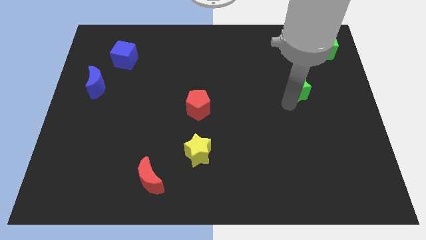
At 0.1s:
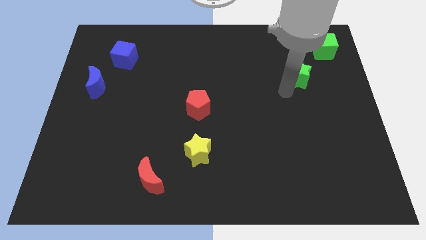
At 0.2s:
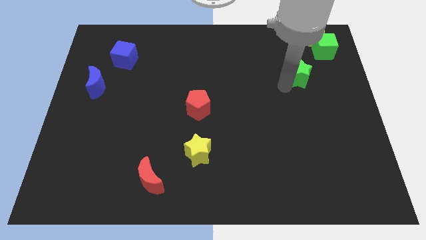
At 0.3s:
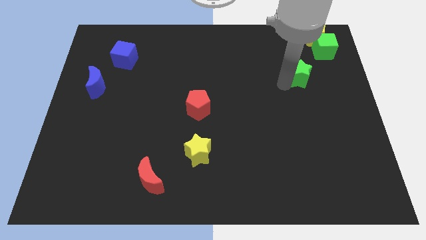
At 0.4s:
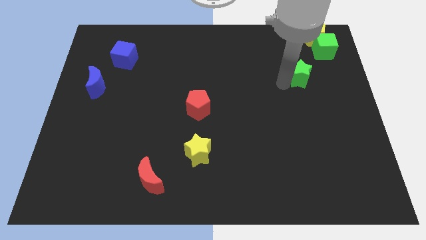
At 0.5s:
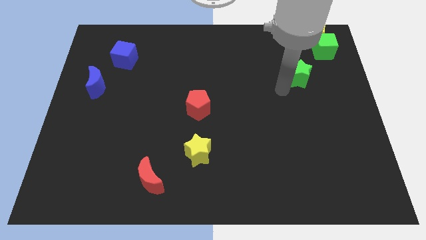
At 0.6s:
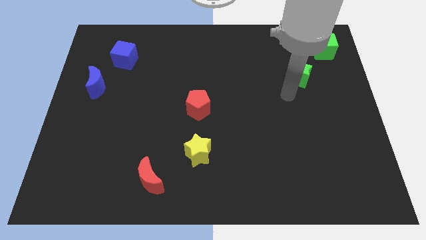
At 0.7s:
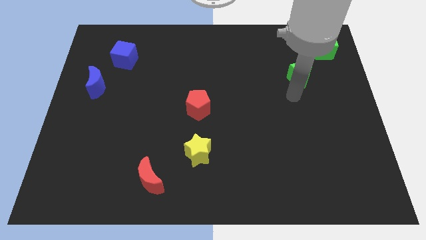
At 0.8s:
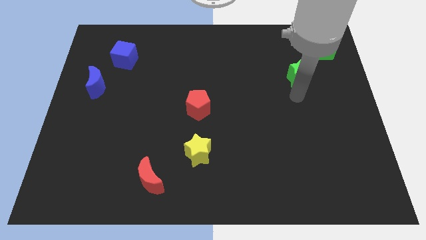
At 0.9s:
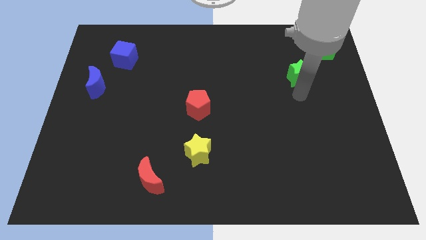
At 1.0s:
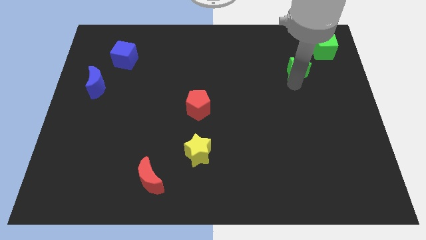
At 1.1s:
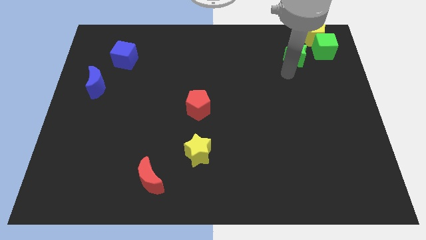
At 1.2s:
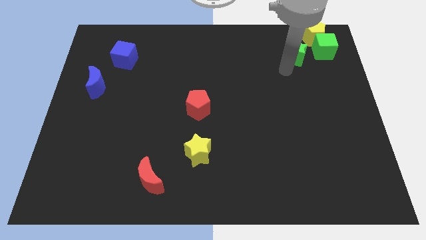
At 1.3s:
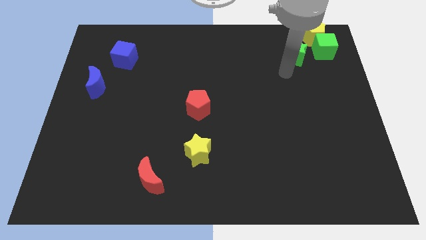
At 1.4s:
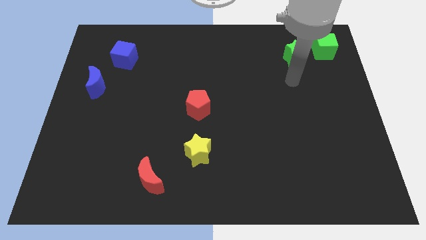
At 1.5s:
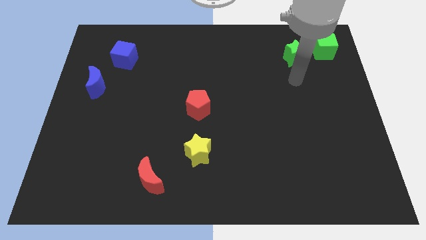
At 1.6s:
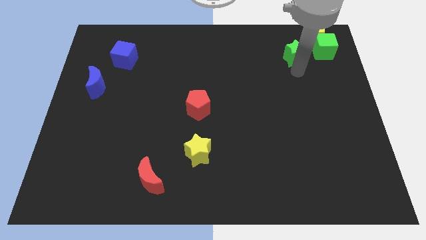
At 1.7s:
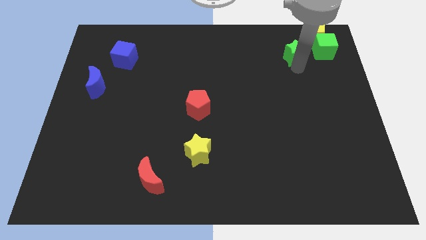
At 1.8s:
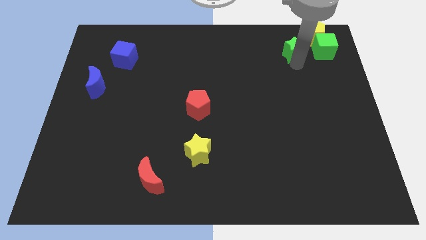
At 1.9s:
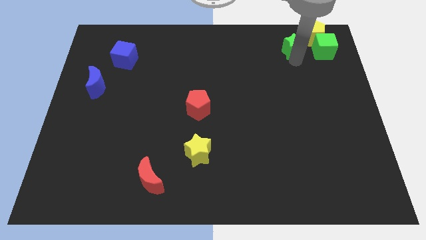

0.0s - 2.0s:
move the green star to the left of green cube

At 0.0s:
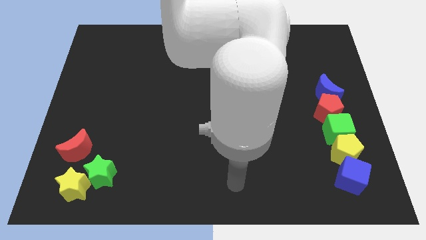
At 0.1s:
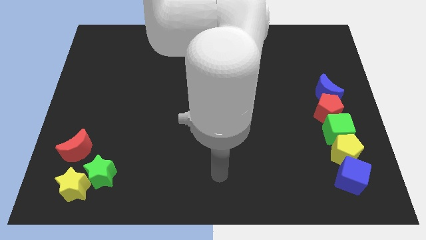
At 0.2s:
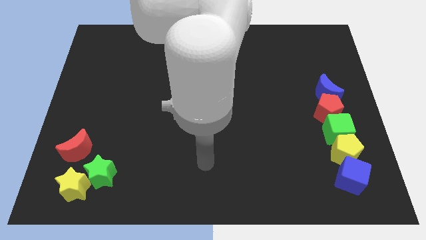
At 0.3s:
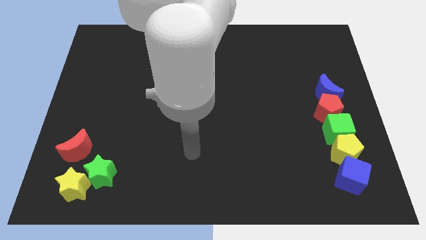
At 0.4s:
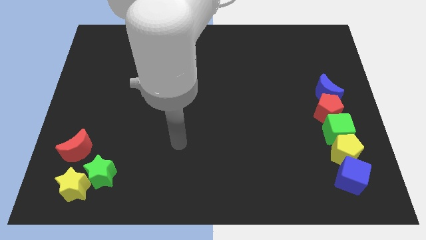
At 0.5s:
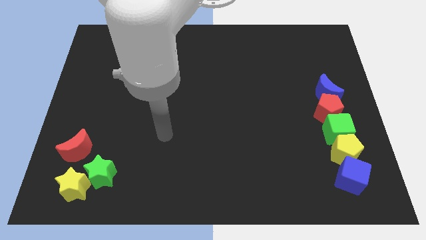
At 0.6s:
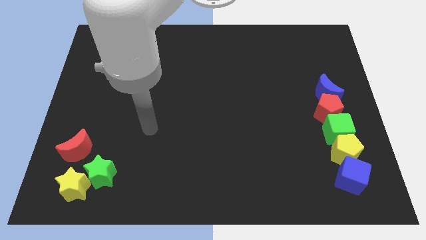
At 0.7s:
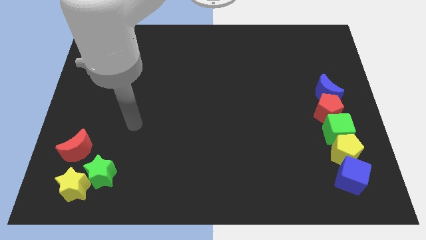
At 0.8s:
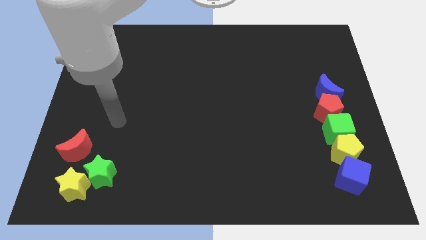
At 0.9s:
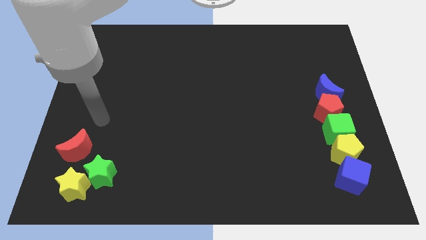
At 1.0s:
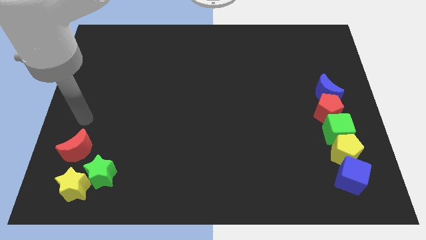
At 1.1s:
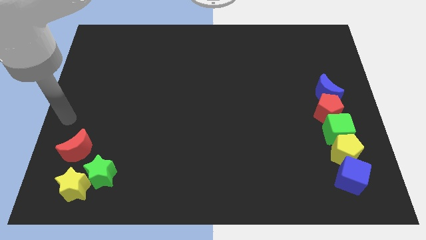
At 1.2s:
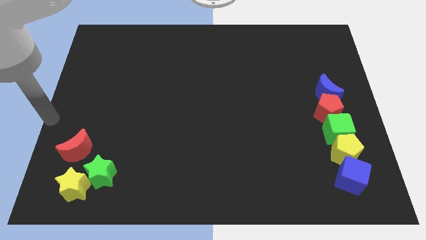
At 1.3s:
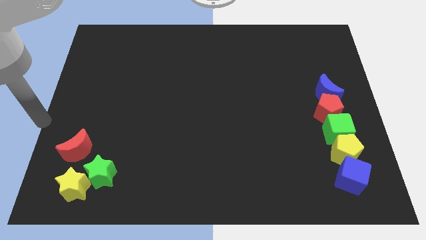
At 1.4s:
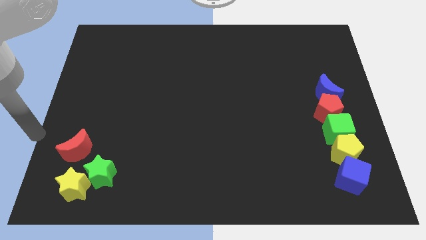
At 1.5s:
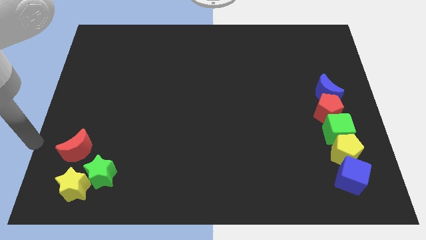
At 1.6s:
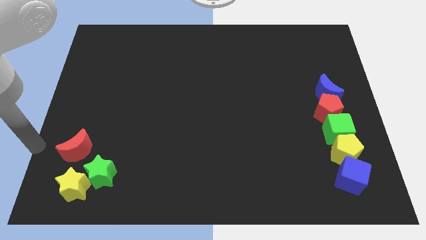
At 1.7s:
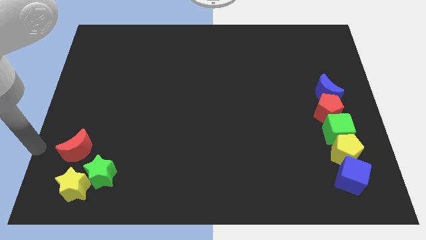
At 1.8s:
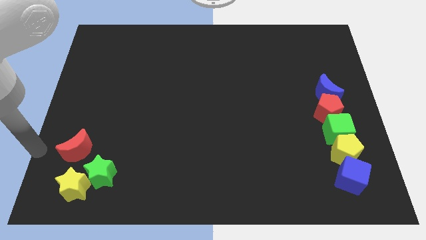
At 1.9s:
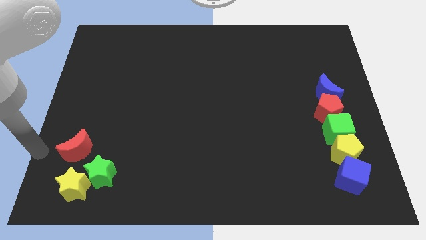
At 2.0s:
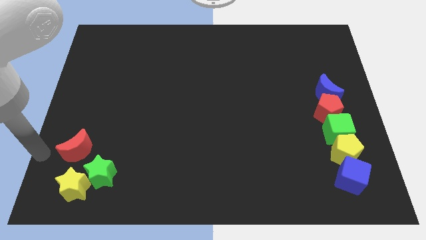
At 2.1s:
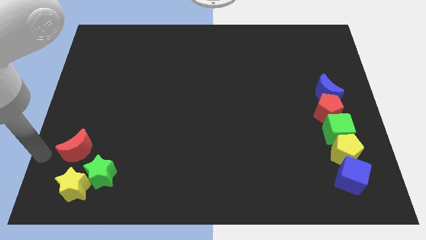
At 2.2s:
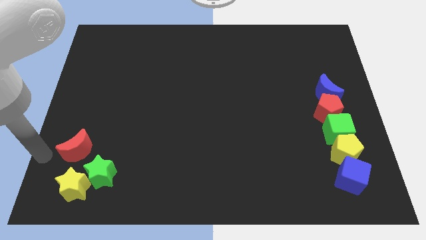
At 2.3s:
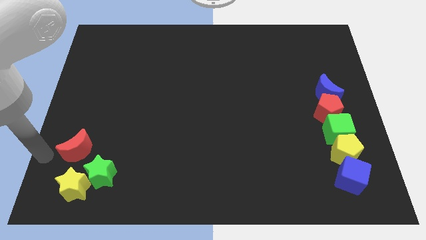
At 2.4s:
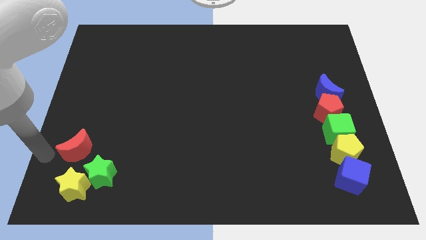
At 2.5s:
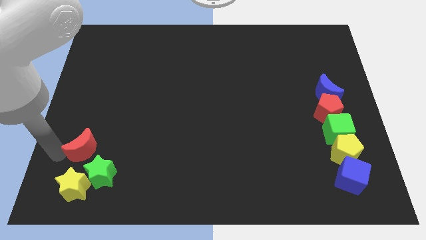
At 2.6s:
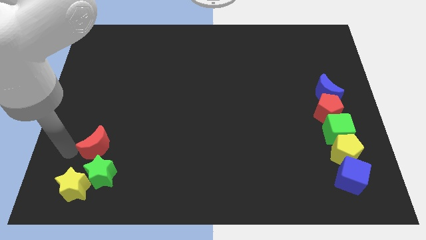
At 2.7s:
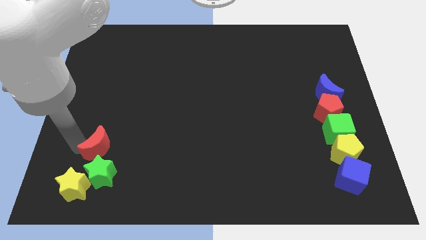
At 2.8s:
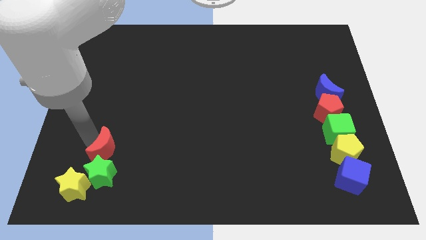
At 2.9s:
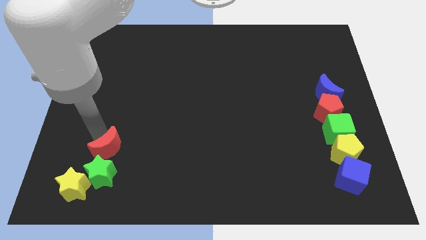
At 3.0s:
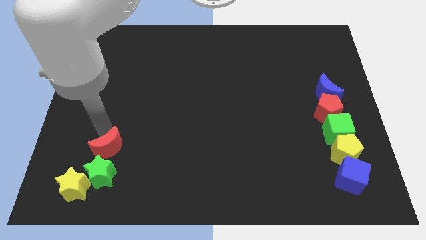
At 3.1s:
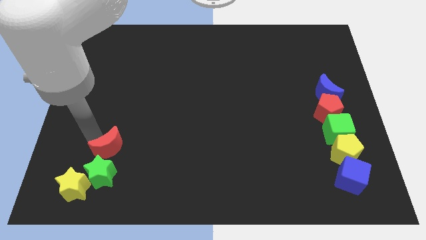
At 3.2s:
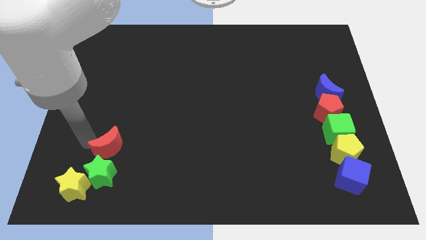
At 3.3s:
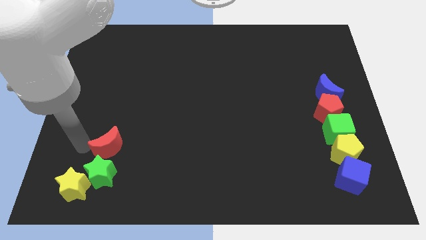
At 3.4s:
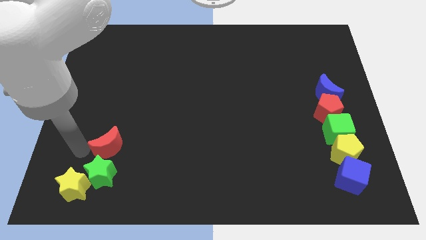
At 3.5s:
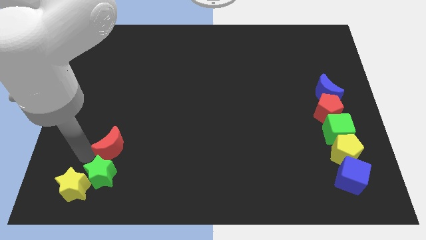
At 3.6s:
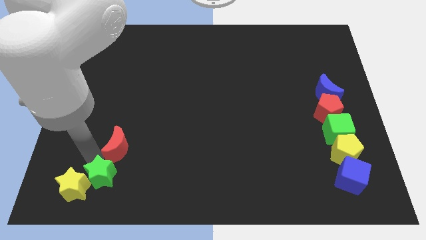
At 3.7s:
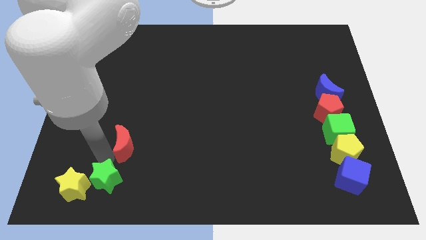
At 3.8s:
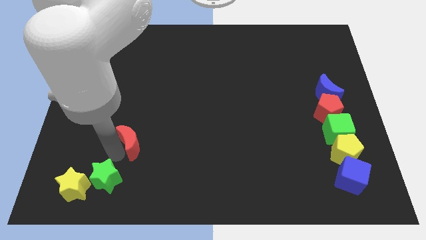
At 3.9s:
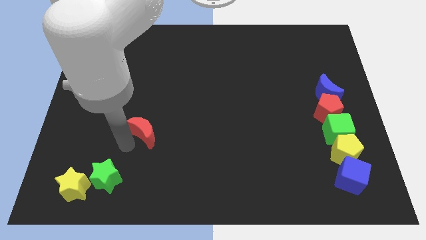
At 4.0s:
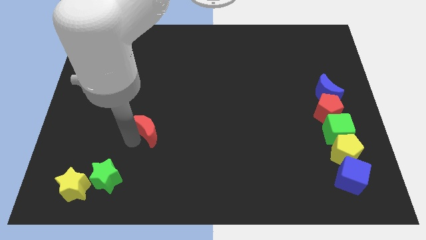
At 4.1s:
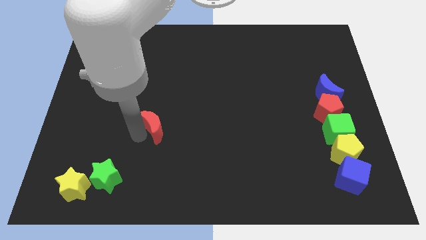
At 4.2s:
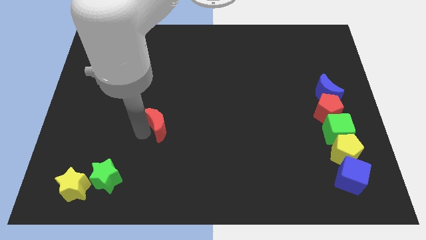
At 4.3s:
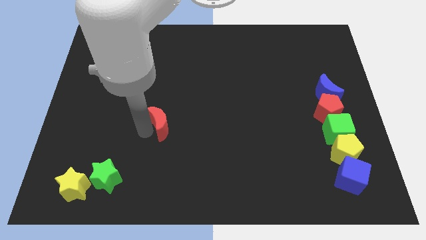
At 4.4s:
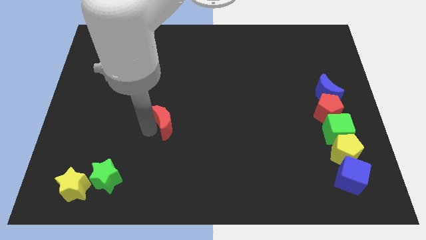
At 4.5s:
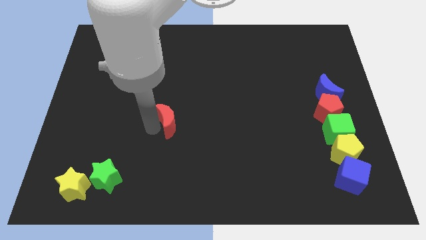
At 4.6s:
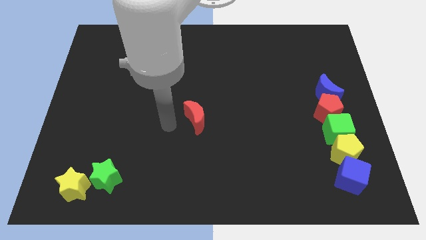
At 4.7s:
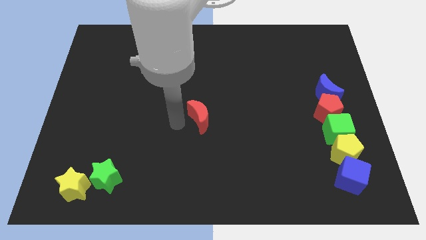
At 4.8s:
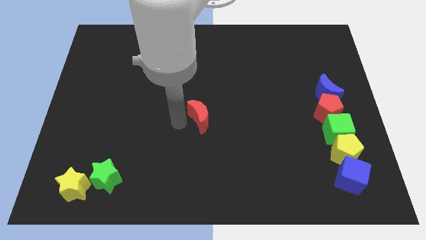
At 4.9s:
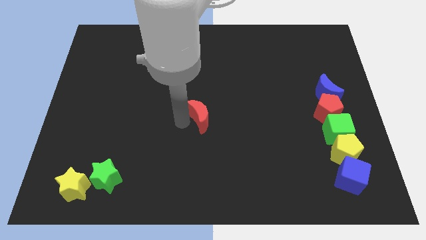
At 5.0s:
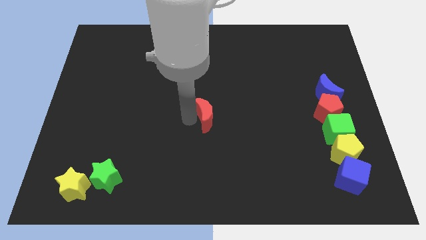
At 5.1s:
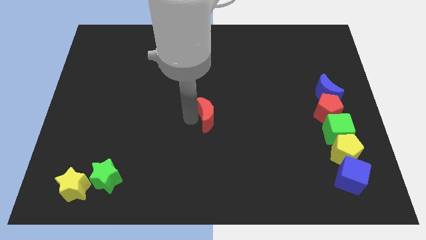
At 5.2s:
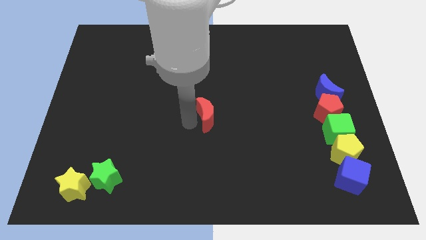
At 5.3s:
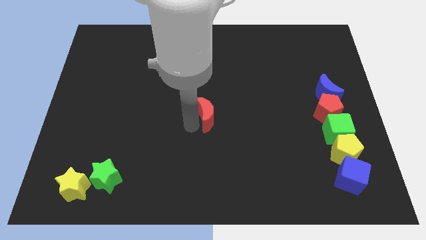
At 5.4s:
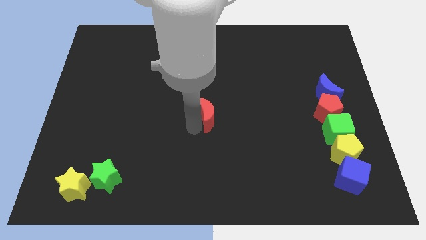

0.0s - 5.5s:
move red moon to the middle of the board

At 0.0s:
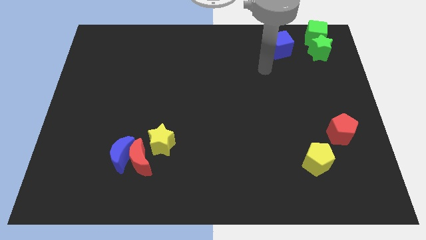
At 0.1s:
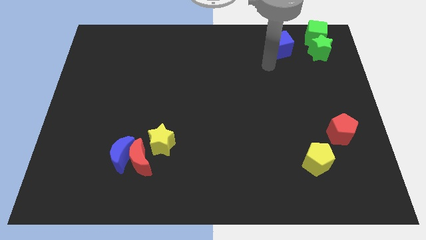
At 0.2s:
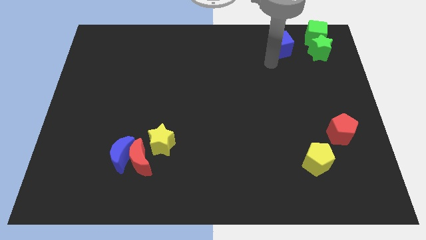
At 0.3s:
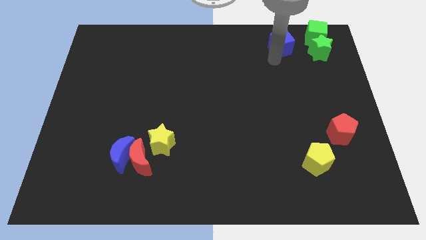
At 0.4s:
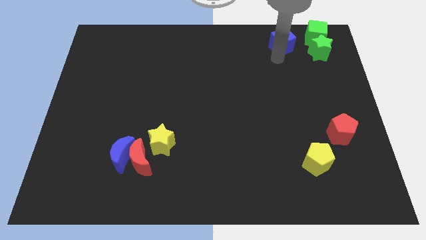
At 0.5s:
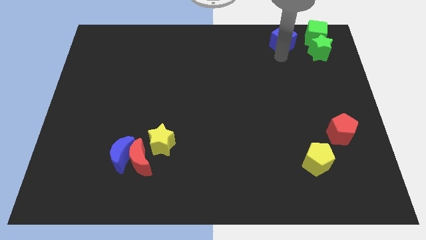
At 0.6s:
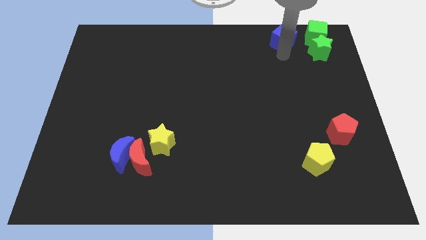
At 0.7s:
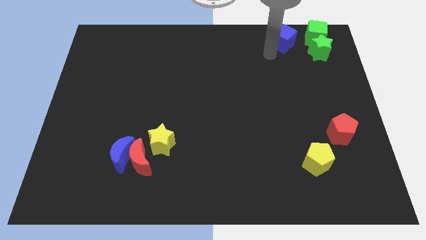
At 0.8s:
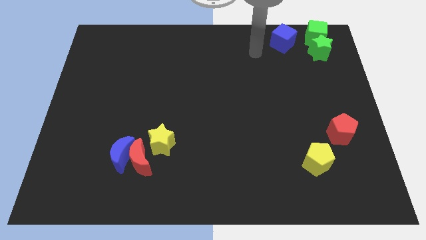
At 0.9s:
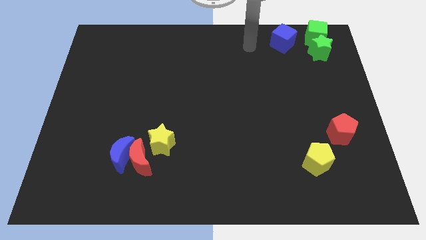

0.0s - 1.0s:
push the blue cube slightly close to the green cube

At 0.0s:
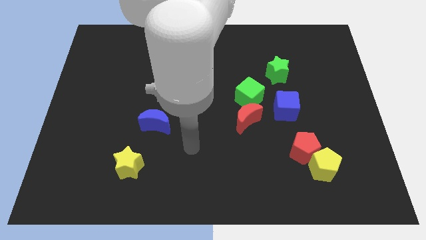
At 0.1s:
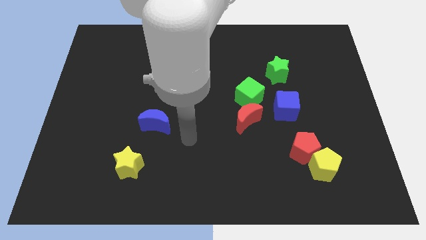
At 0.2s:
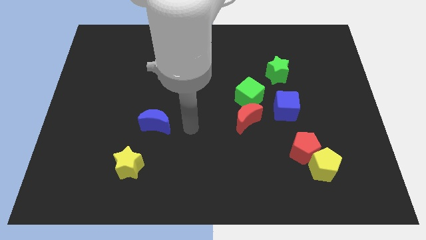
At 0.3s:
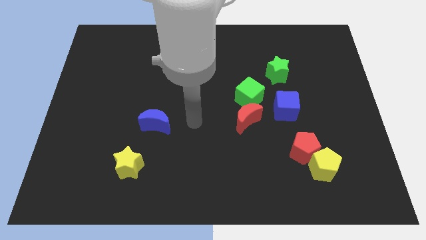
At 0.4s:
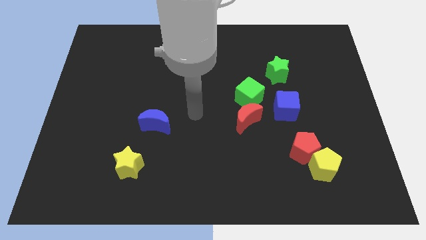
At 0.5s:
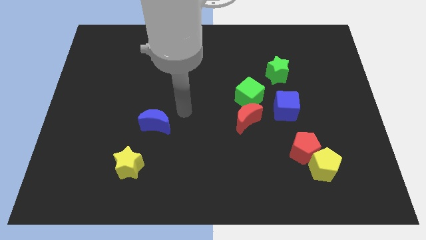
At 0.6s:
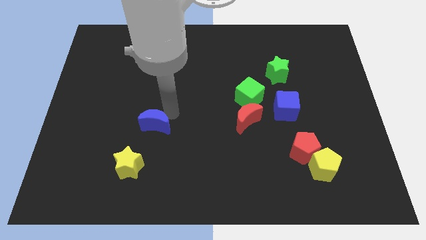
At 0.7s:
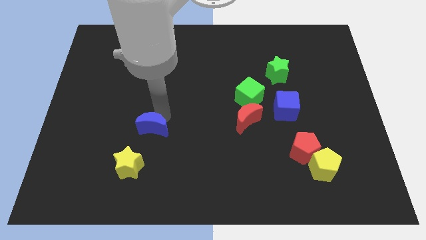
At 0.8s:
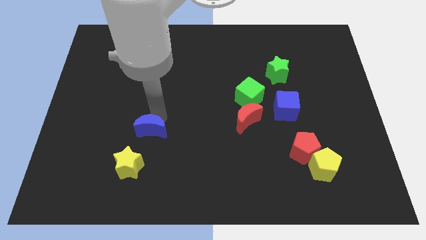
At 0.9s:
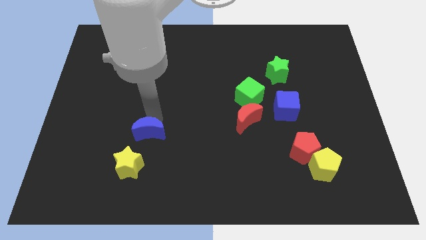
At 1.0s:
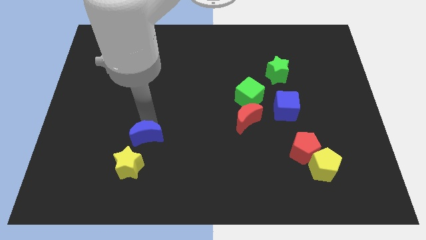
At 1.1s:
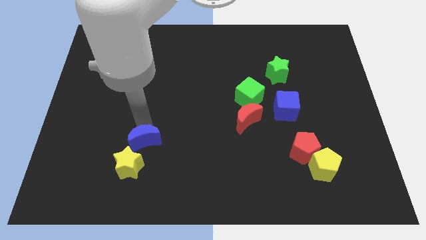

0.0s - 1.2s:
push the blue moon close to the yellow star
